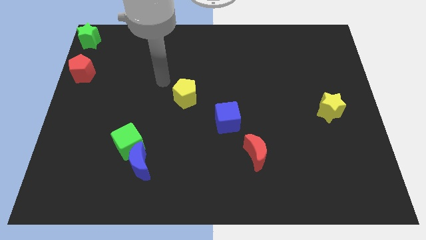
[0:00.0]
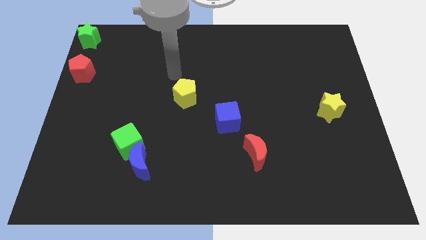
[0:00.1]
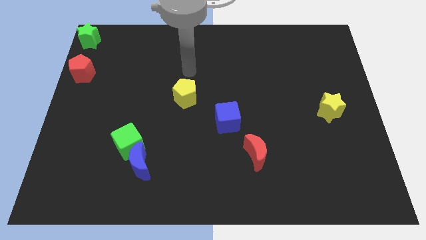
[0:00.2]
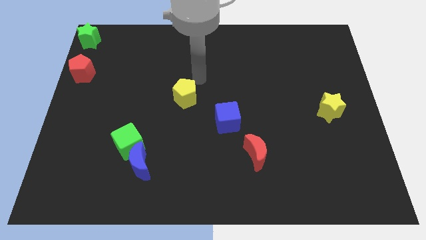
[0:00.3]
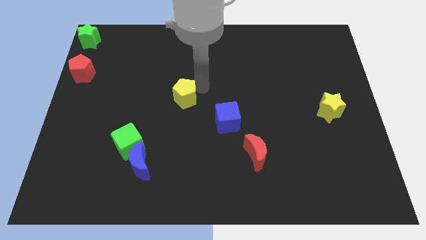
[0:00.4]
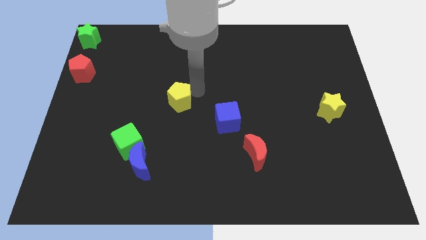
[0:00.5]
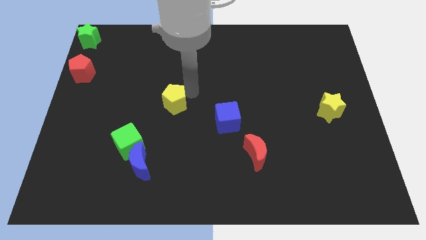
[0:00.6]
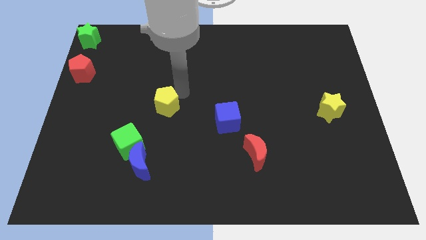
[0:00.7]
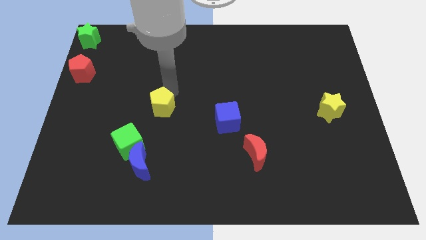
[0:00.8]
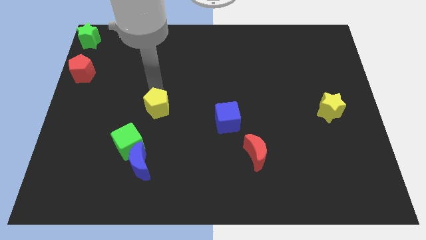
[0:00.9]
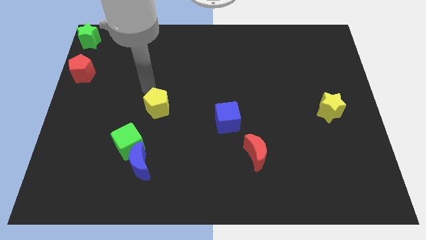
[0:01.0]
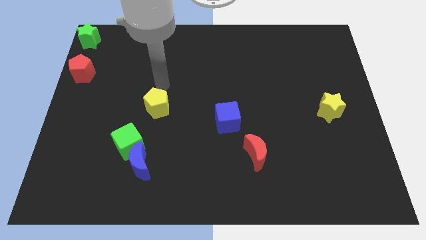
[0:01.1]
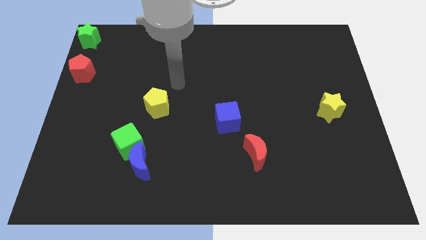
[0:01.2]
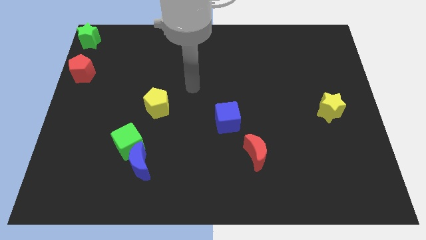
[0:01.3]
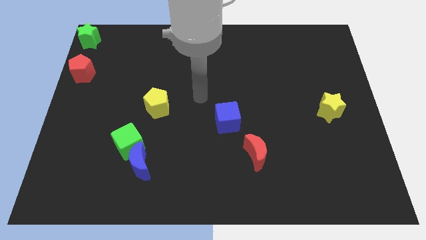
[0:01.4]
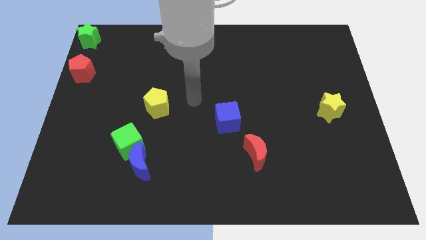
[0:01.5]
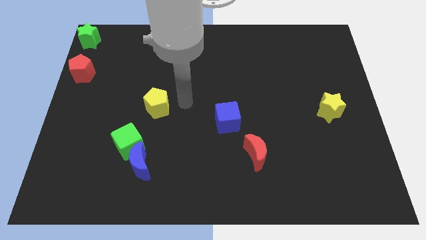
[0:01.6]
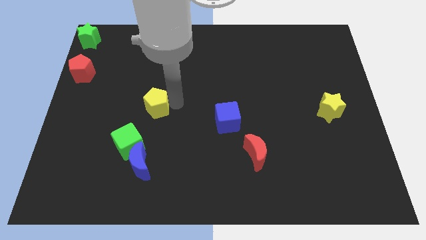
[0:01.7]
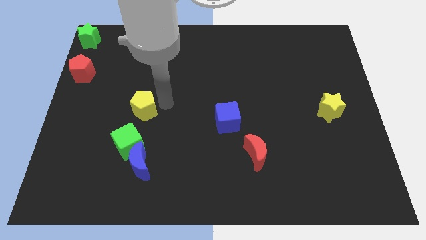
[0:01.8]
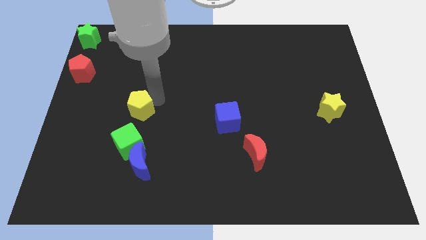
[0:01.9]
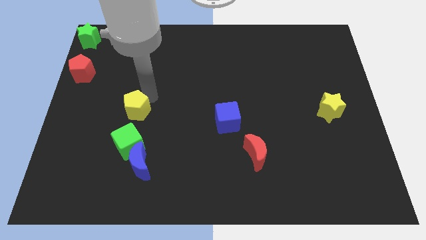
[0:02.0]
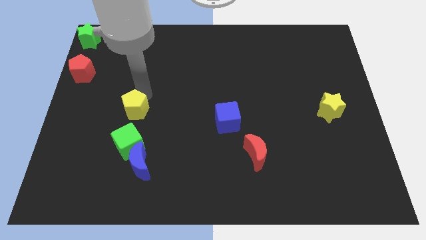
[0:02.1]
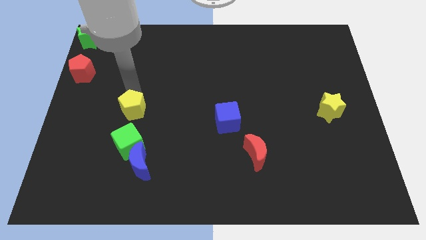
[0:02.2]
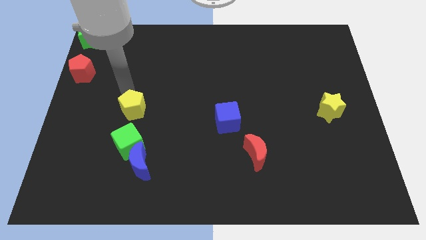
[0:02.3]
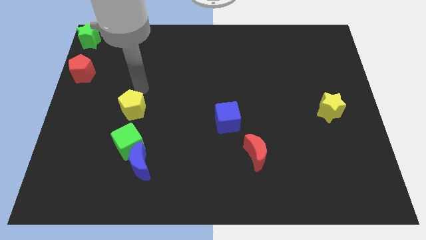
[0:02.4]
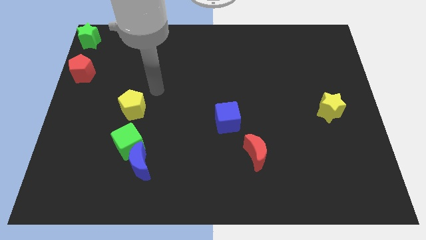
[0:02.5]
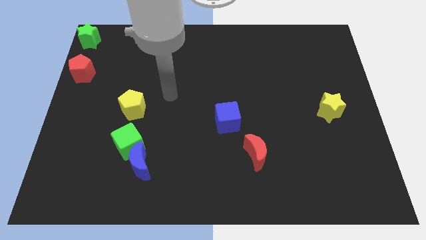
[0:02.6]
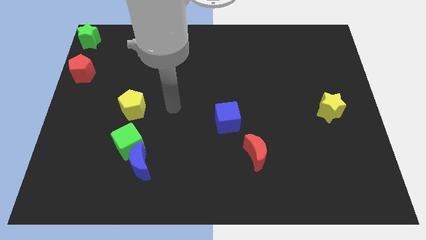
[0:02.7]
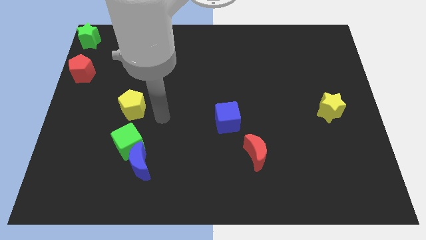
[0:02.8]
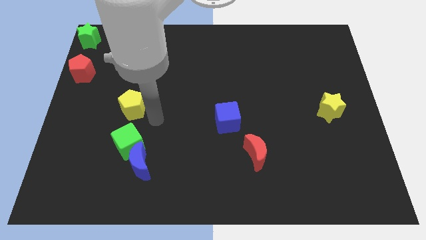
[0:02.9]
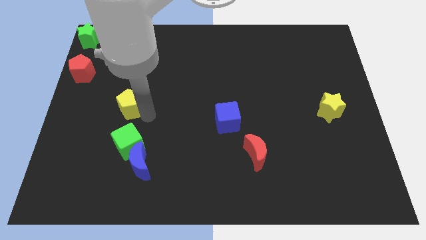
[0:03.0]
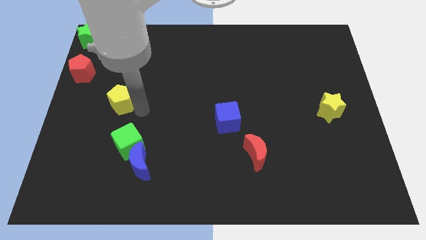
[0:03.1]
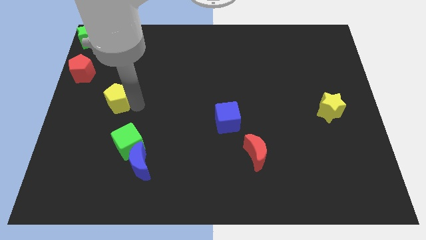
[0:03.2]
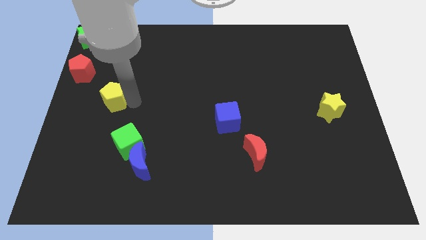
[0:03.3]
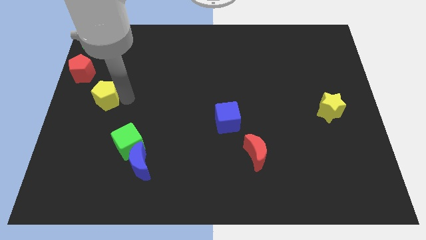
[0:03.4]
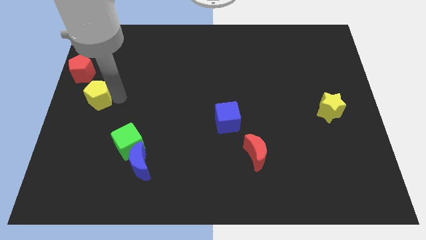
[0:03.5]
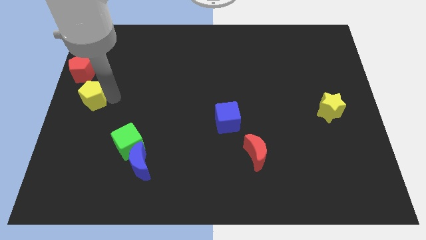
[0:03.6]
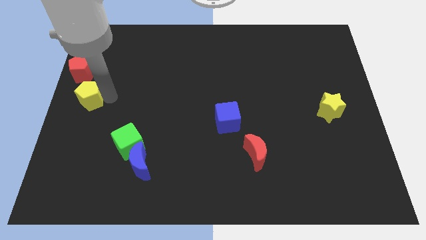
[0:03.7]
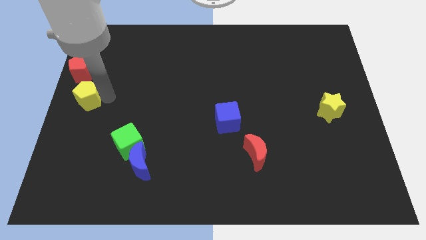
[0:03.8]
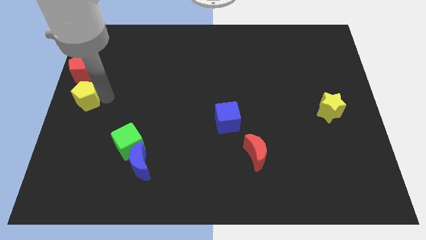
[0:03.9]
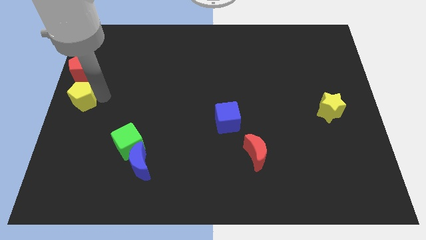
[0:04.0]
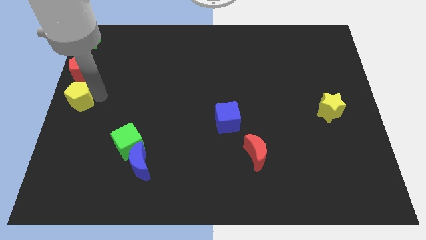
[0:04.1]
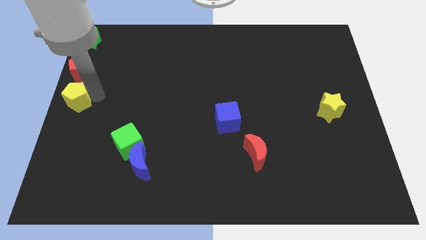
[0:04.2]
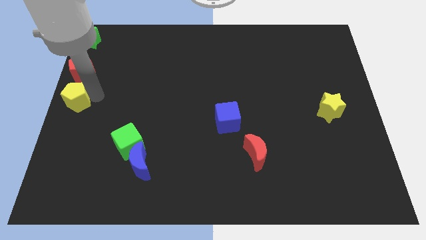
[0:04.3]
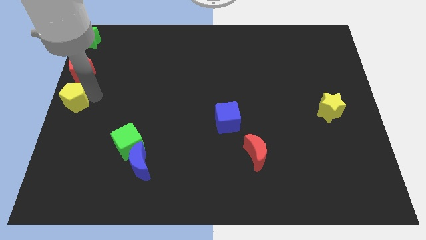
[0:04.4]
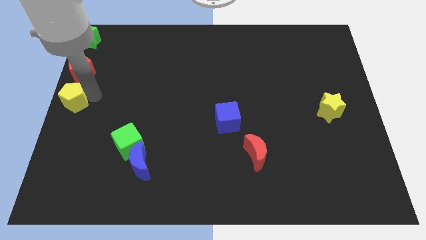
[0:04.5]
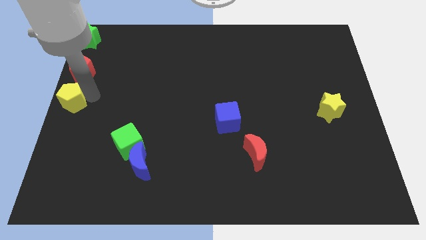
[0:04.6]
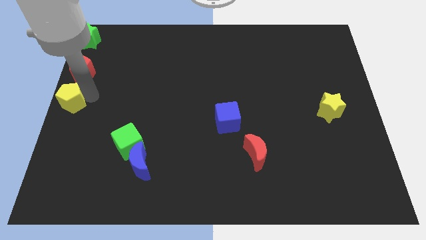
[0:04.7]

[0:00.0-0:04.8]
push the yellow pentagon towards the center left side of the board

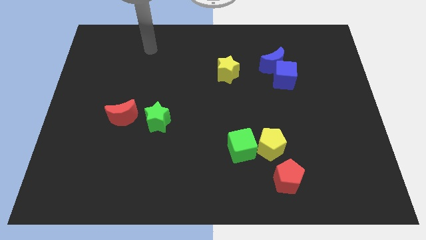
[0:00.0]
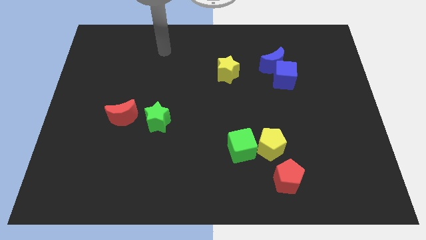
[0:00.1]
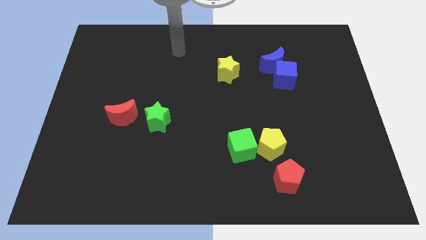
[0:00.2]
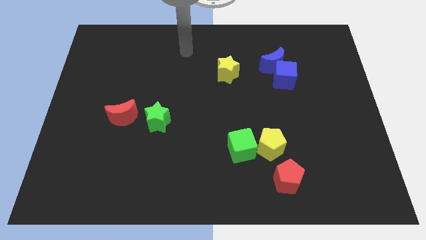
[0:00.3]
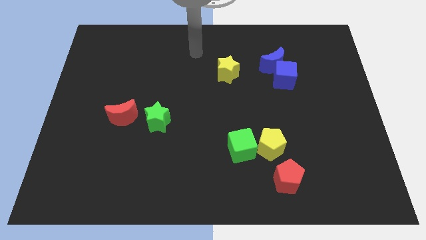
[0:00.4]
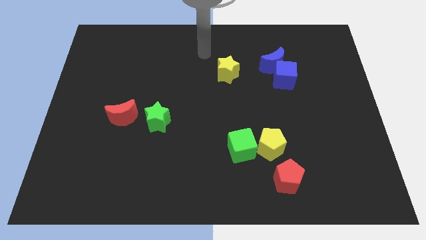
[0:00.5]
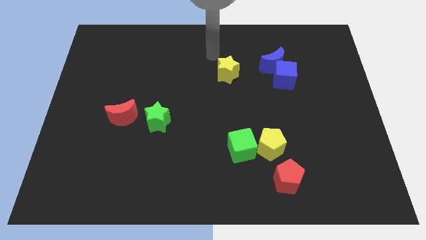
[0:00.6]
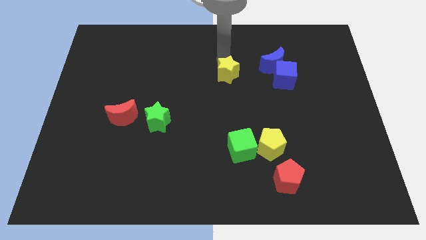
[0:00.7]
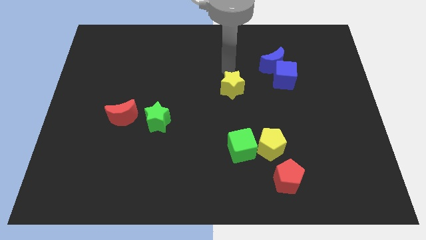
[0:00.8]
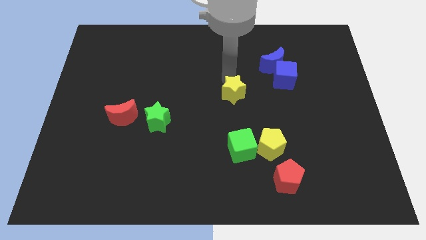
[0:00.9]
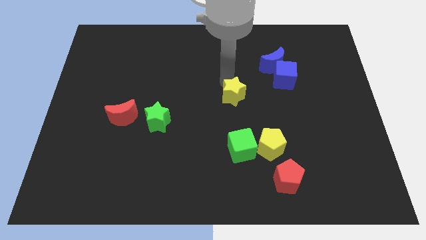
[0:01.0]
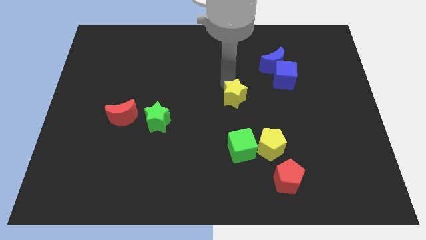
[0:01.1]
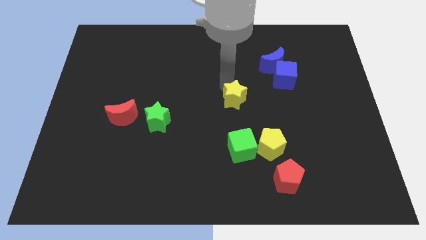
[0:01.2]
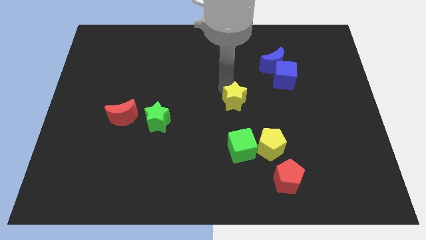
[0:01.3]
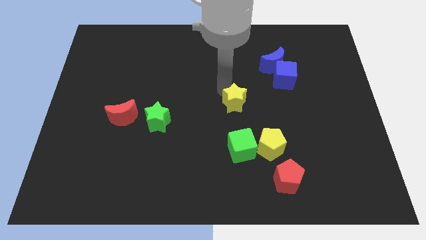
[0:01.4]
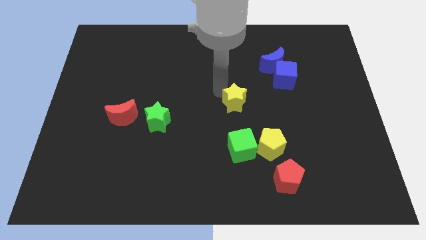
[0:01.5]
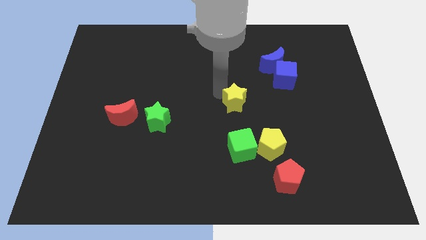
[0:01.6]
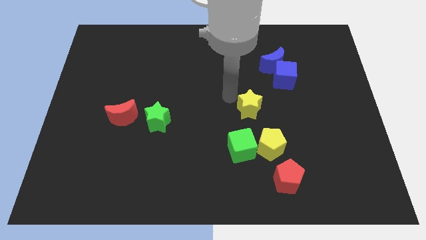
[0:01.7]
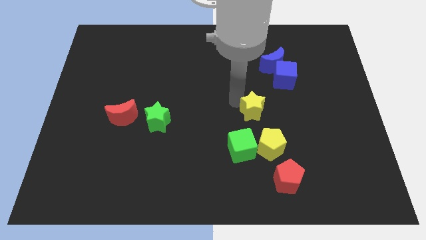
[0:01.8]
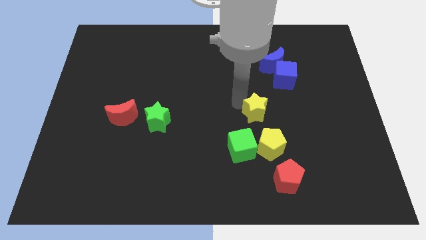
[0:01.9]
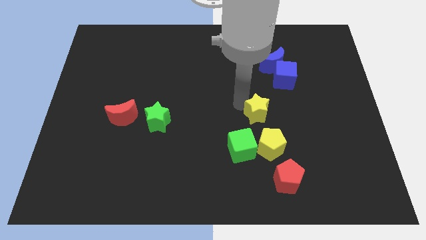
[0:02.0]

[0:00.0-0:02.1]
put the yellow star diagonally top right to the green cube

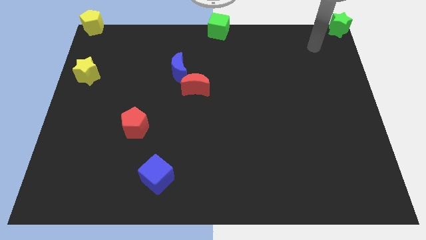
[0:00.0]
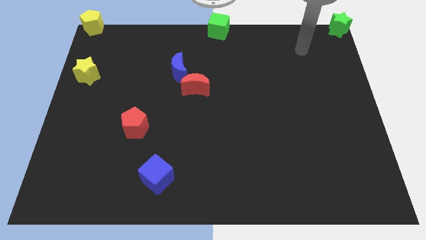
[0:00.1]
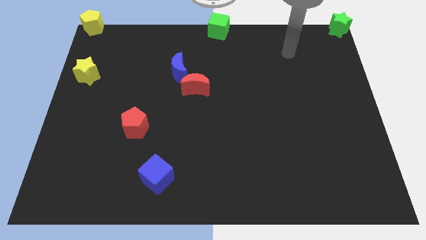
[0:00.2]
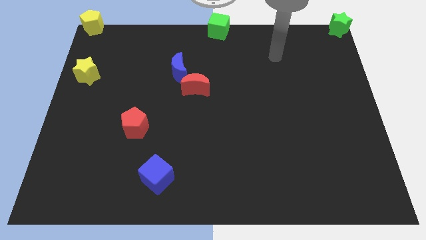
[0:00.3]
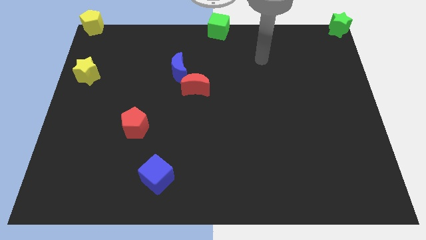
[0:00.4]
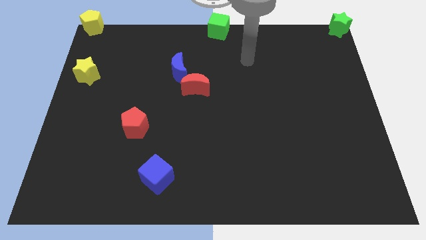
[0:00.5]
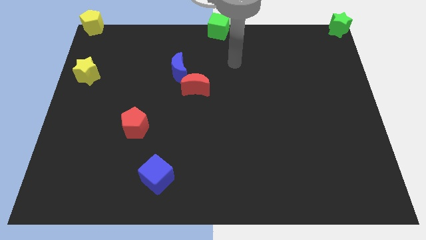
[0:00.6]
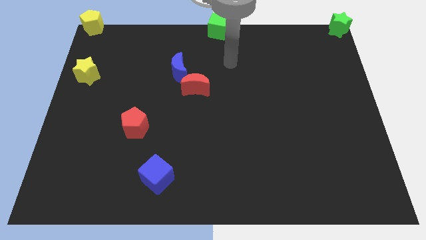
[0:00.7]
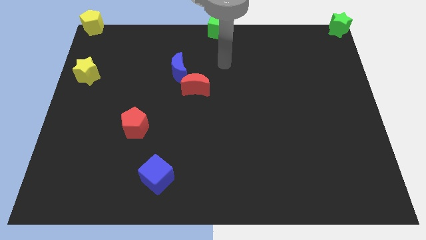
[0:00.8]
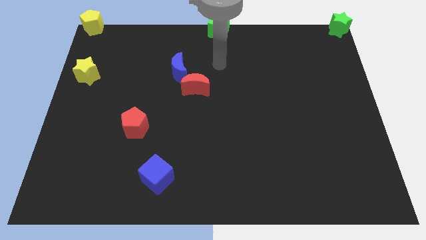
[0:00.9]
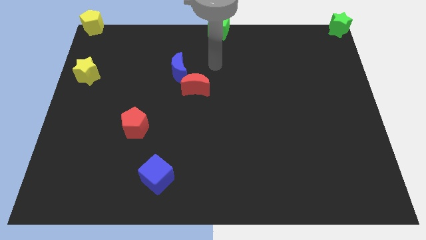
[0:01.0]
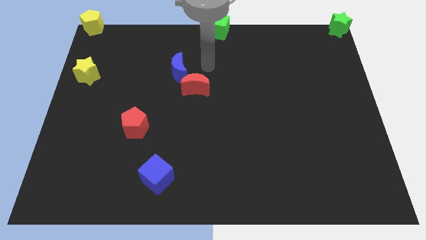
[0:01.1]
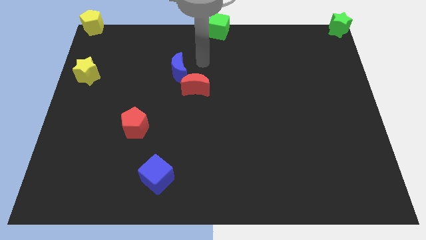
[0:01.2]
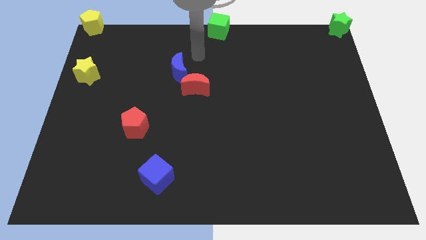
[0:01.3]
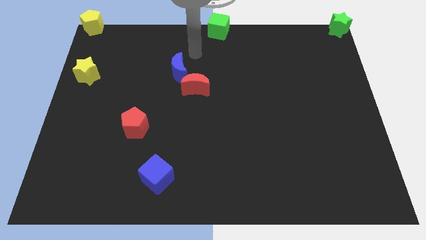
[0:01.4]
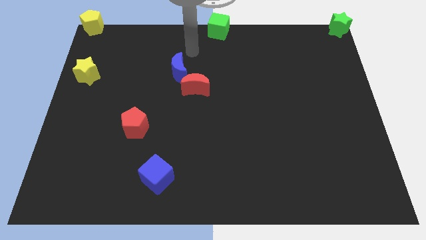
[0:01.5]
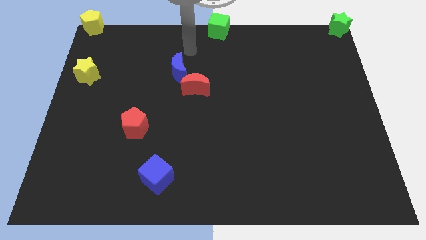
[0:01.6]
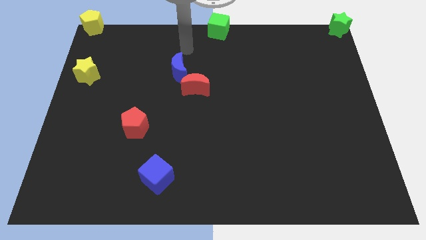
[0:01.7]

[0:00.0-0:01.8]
move your arm towards the top center

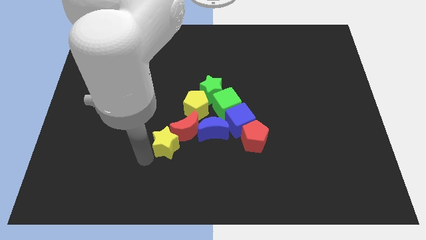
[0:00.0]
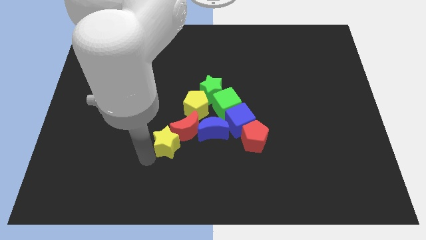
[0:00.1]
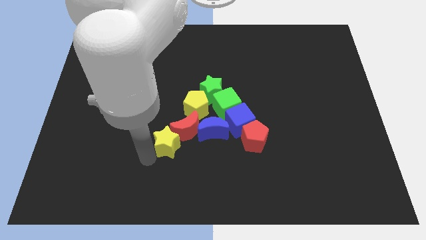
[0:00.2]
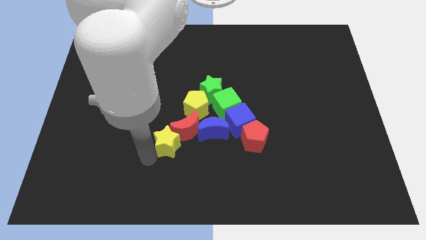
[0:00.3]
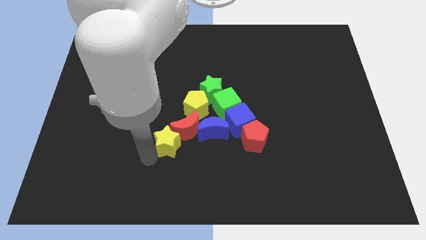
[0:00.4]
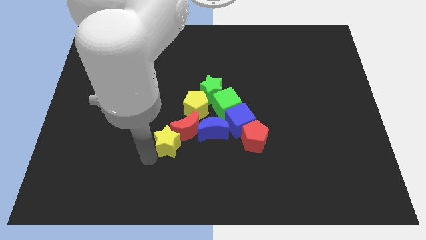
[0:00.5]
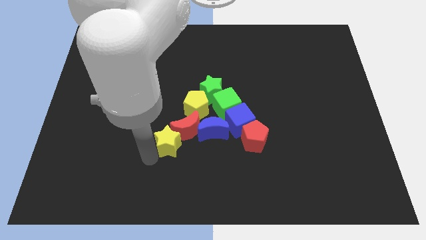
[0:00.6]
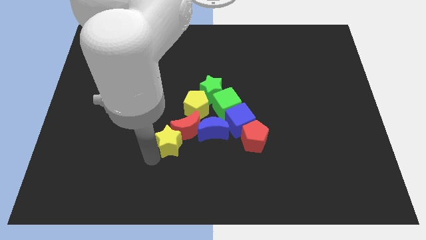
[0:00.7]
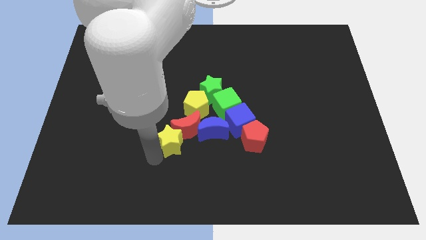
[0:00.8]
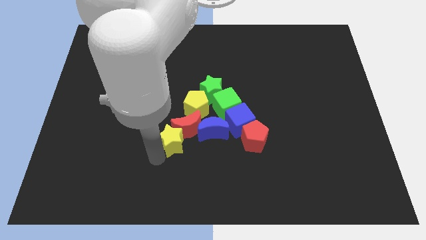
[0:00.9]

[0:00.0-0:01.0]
slightly push the yellow star into the red crescent
